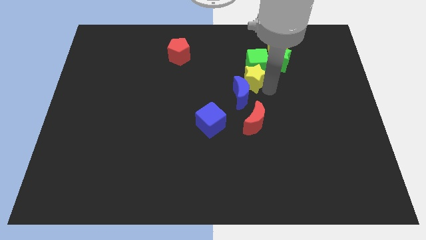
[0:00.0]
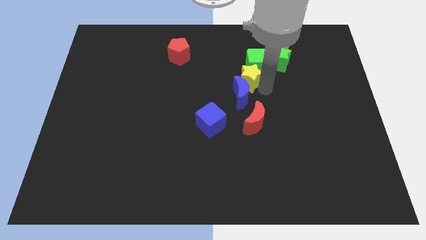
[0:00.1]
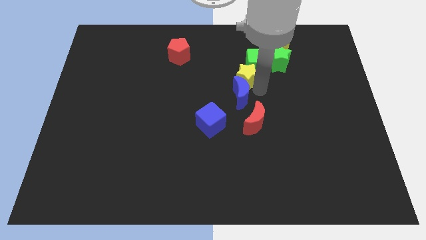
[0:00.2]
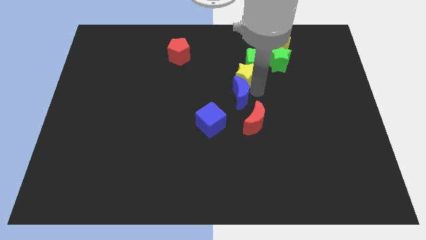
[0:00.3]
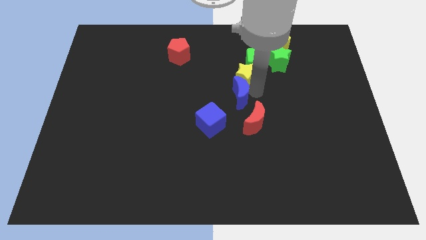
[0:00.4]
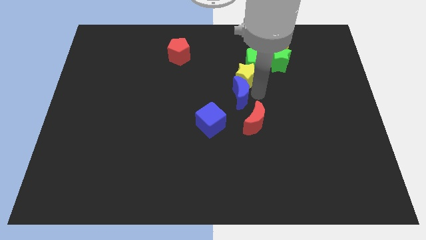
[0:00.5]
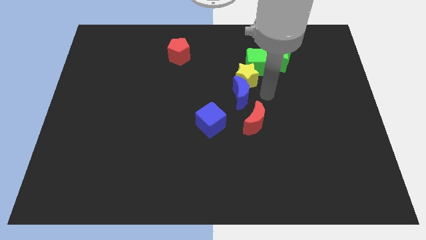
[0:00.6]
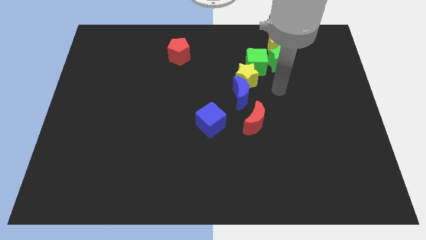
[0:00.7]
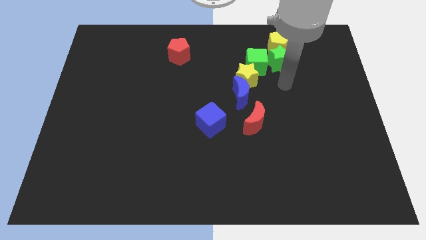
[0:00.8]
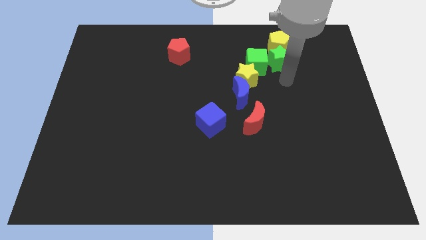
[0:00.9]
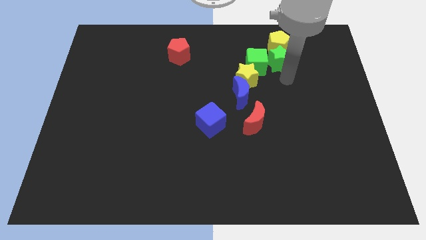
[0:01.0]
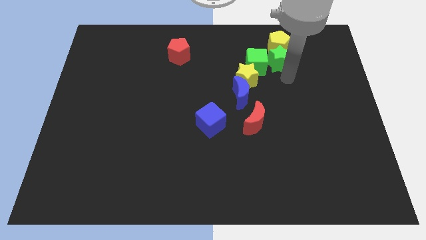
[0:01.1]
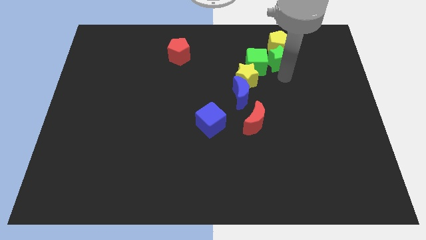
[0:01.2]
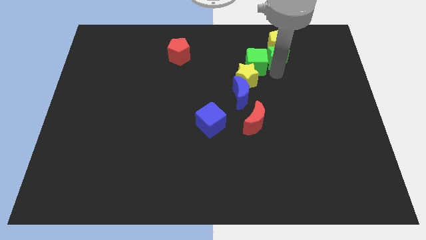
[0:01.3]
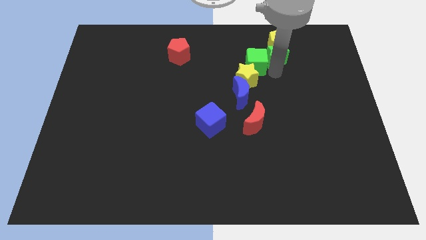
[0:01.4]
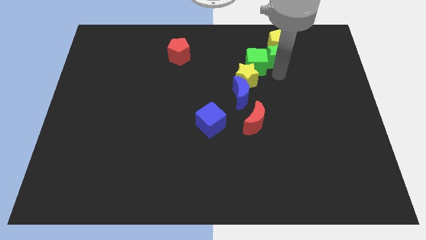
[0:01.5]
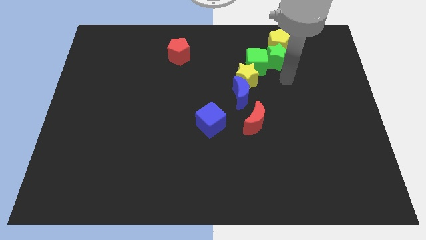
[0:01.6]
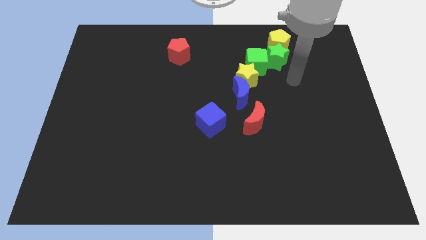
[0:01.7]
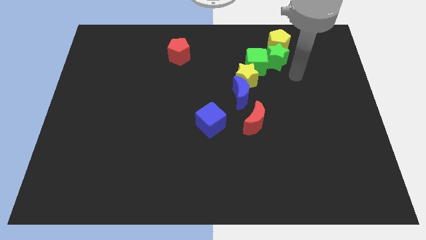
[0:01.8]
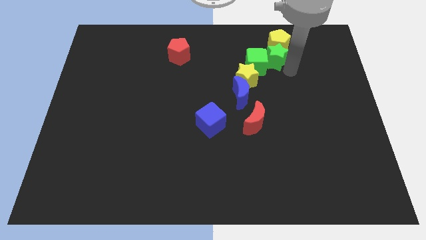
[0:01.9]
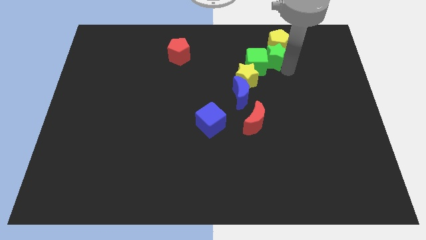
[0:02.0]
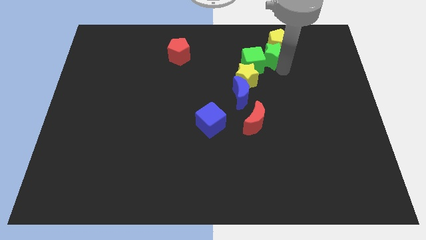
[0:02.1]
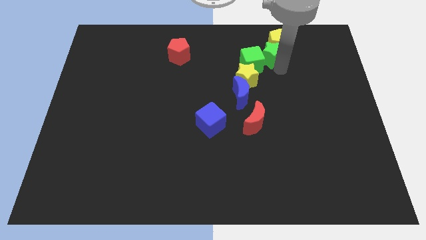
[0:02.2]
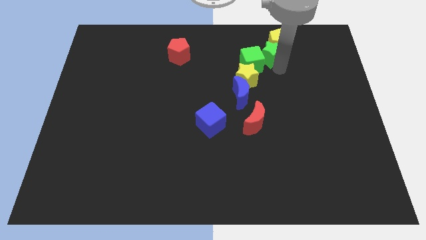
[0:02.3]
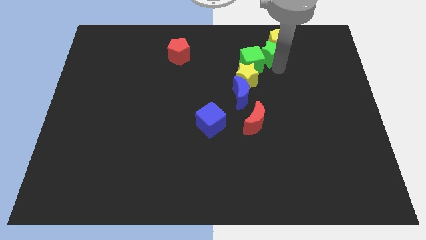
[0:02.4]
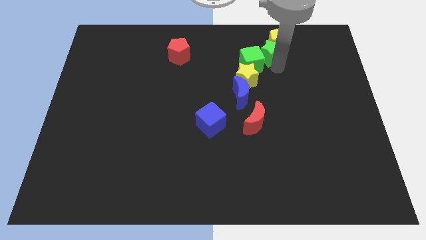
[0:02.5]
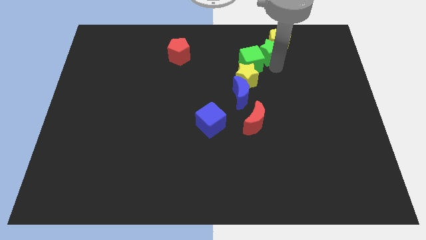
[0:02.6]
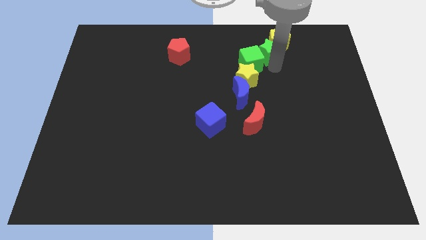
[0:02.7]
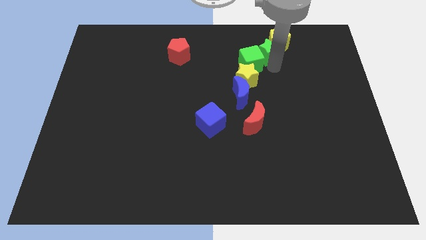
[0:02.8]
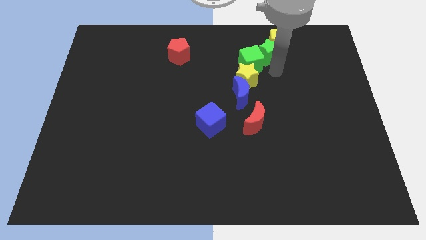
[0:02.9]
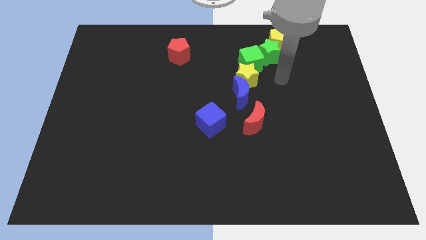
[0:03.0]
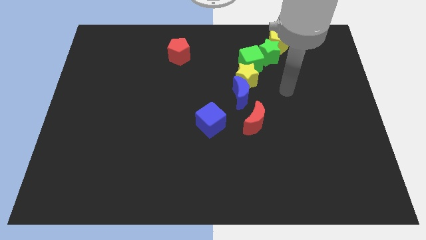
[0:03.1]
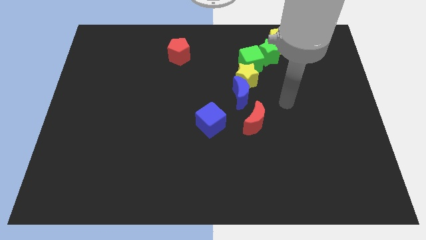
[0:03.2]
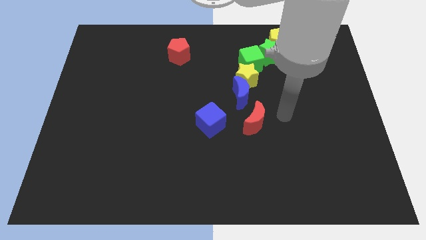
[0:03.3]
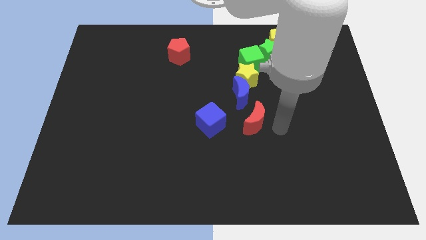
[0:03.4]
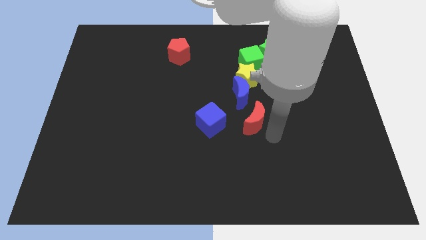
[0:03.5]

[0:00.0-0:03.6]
push the green star into green cube

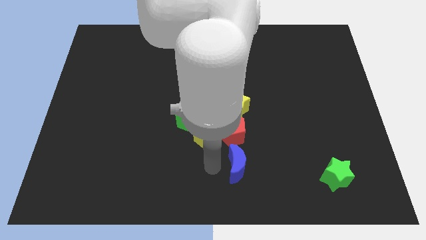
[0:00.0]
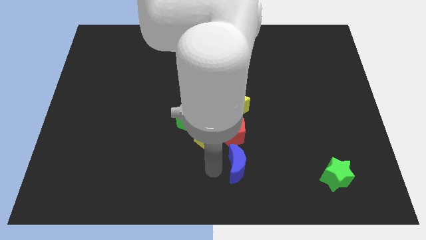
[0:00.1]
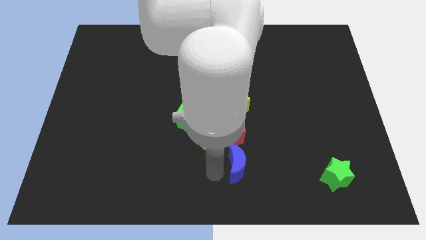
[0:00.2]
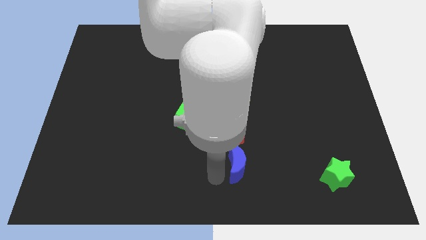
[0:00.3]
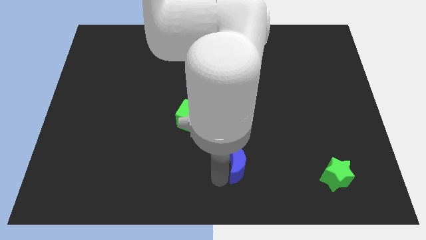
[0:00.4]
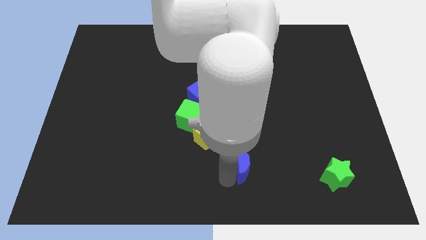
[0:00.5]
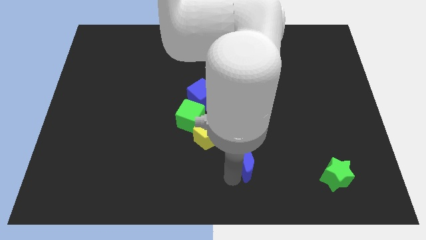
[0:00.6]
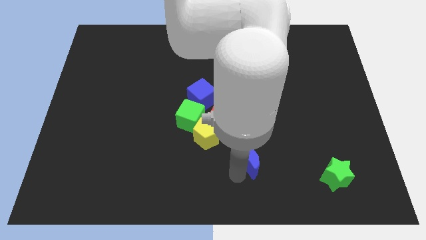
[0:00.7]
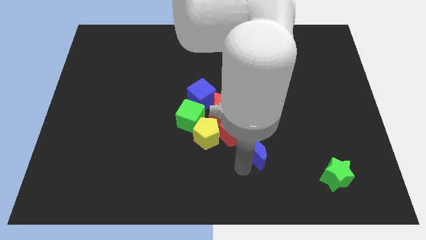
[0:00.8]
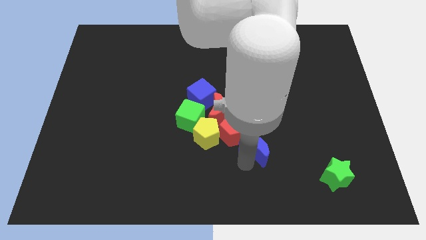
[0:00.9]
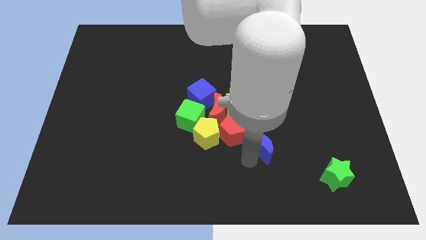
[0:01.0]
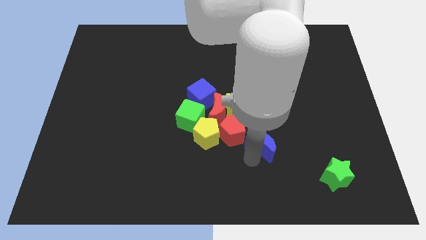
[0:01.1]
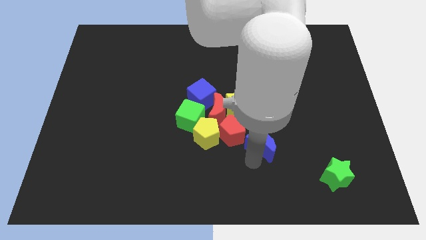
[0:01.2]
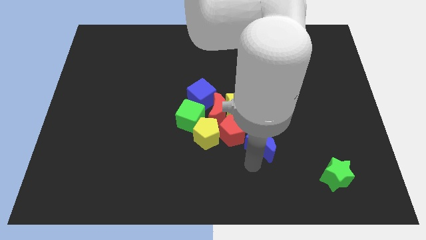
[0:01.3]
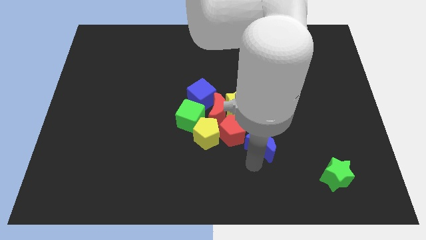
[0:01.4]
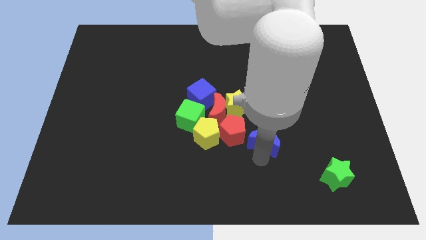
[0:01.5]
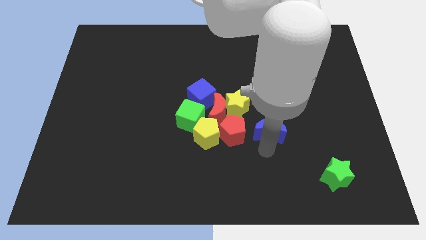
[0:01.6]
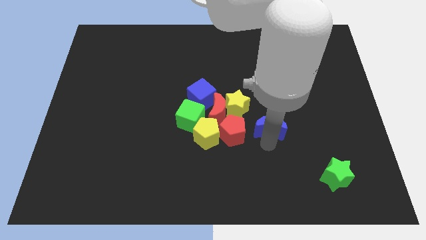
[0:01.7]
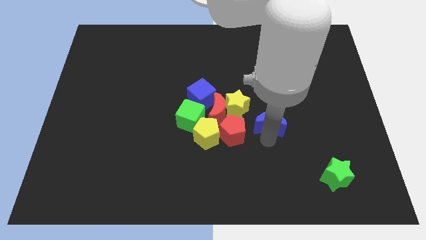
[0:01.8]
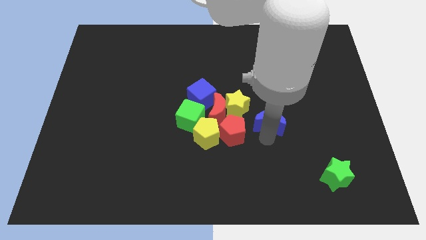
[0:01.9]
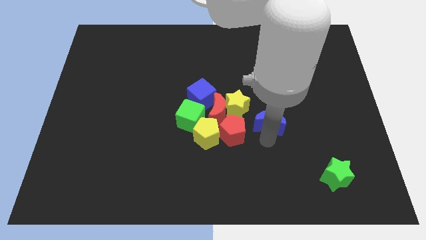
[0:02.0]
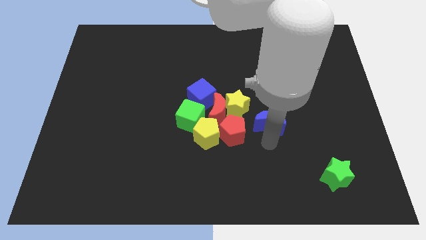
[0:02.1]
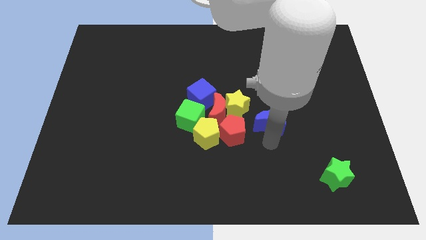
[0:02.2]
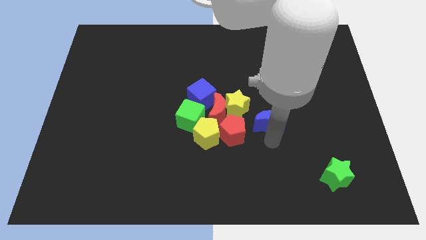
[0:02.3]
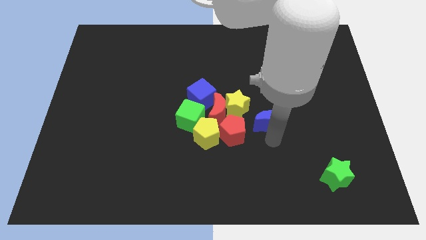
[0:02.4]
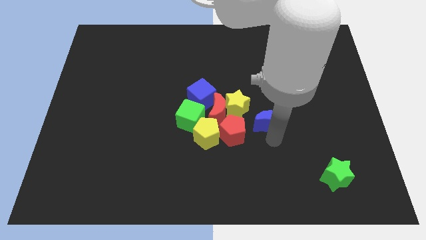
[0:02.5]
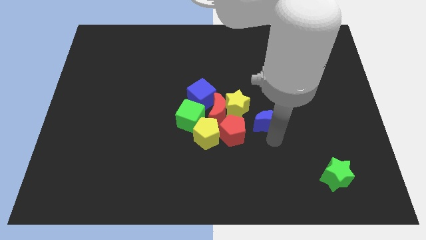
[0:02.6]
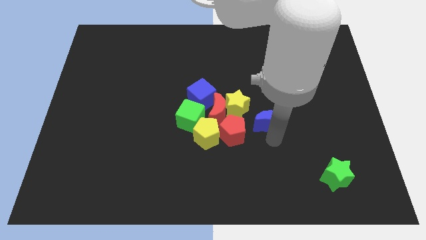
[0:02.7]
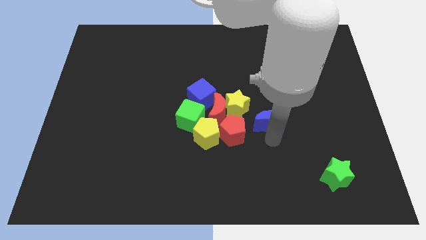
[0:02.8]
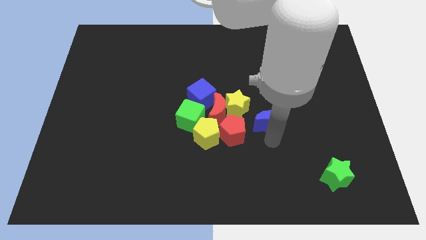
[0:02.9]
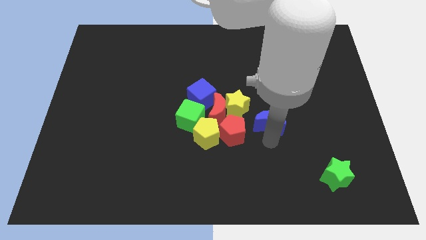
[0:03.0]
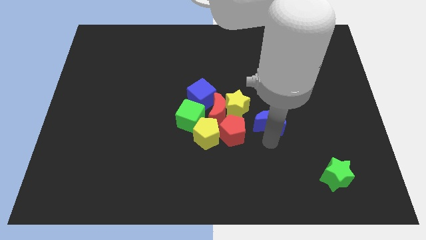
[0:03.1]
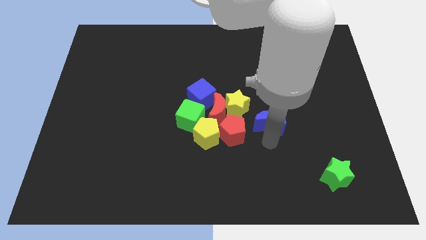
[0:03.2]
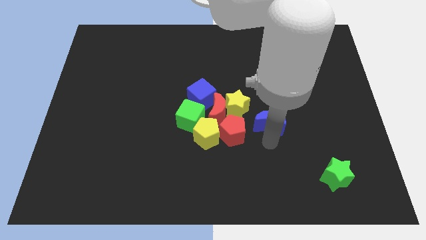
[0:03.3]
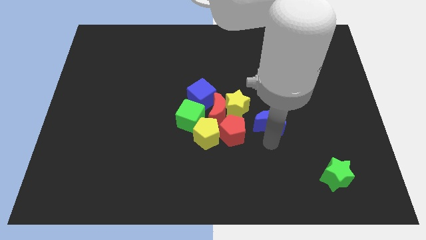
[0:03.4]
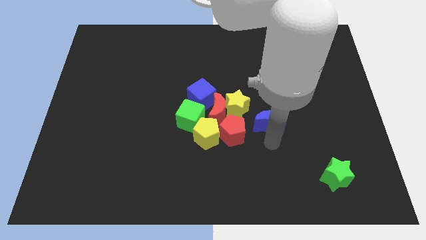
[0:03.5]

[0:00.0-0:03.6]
move the blue crescent to the right of the red pentagon

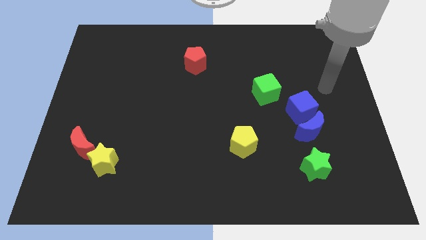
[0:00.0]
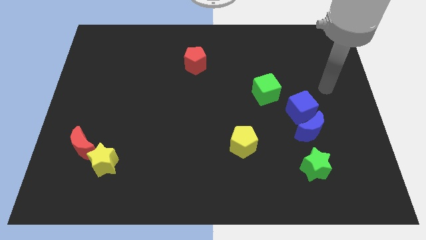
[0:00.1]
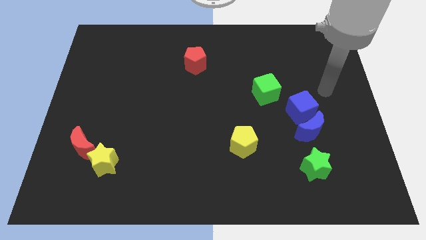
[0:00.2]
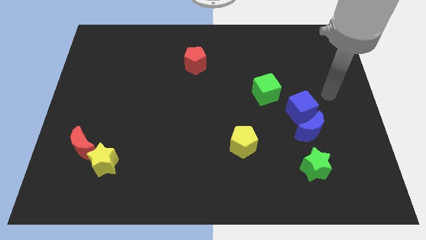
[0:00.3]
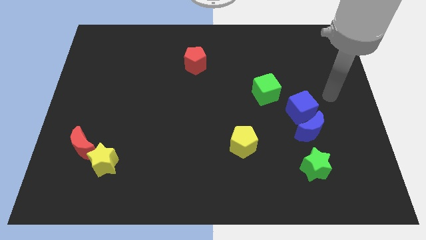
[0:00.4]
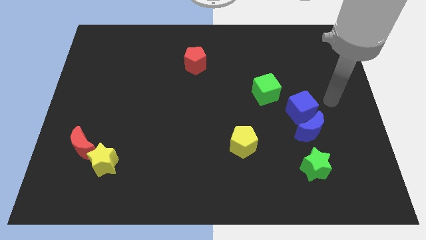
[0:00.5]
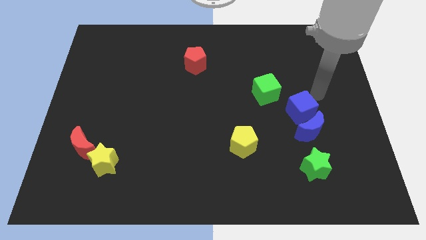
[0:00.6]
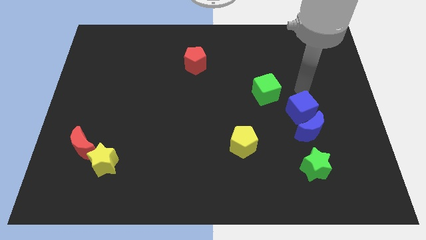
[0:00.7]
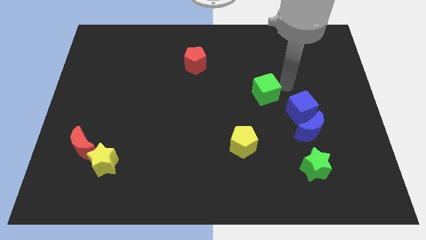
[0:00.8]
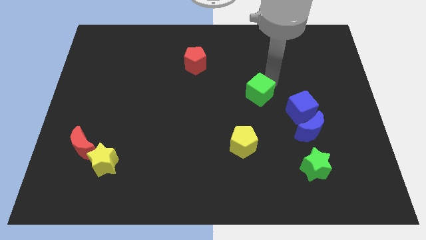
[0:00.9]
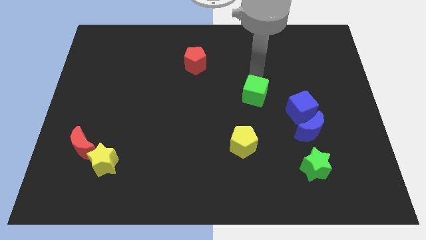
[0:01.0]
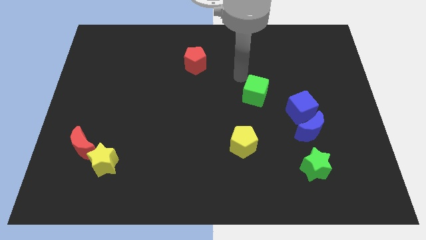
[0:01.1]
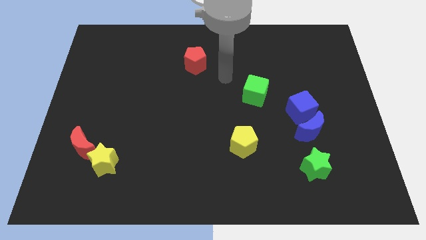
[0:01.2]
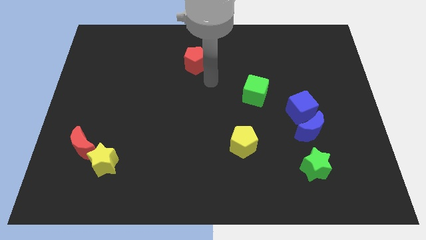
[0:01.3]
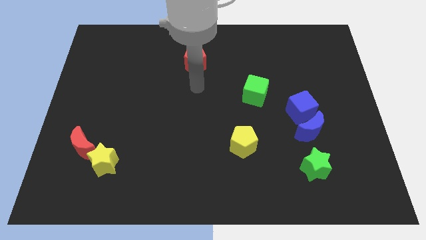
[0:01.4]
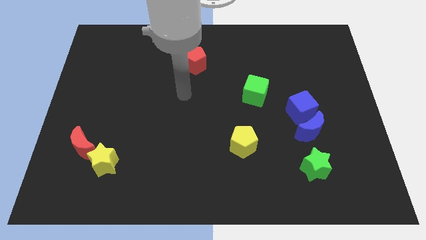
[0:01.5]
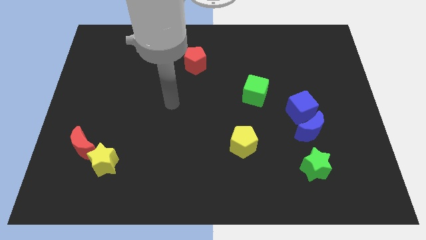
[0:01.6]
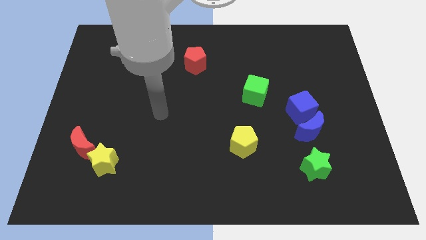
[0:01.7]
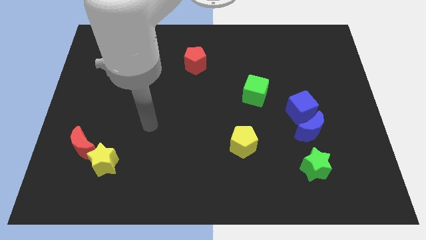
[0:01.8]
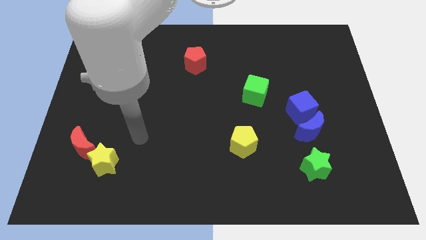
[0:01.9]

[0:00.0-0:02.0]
slide the green cube
